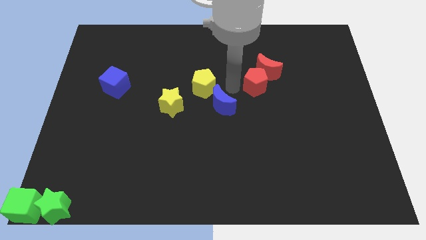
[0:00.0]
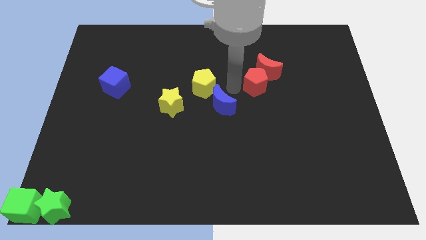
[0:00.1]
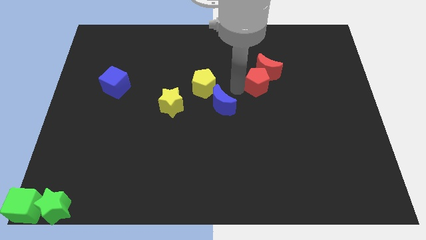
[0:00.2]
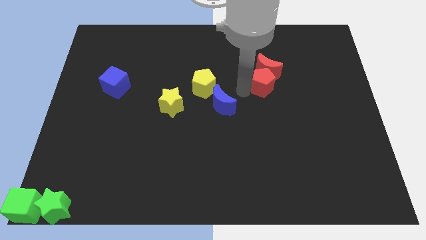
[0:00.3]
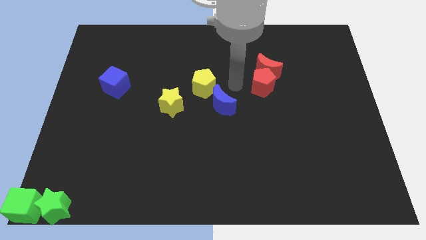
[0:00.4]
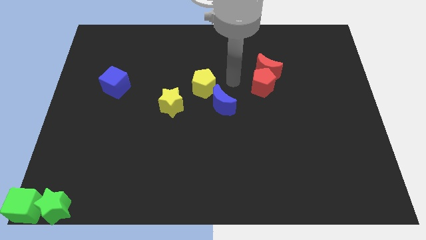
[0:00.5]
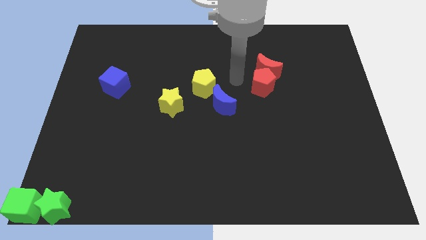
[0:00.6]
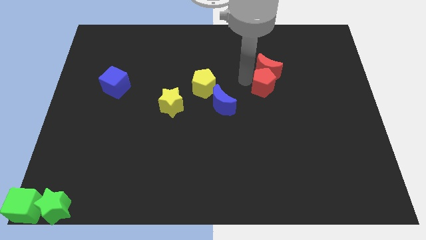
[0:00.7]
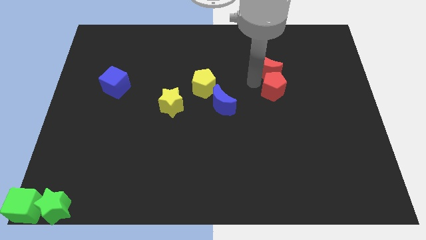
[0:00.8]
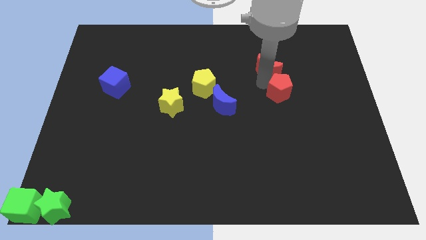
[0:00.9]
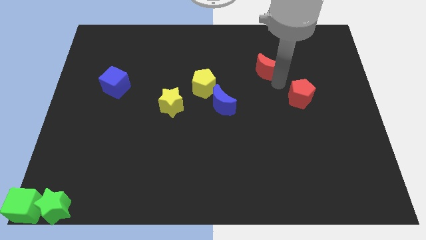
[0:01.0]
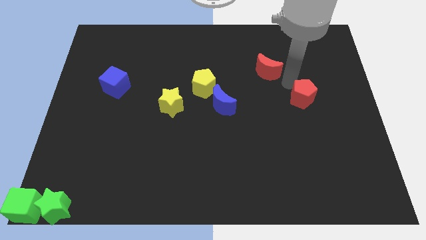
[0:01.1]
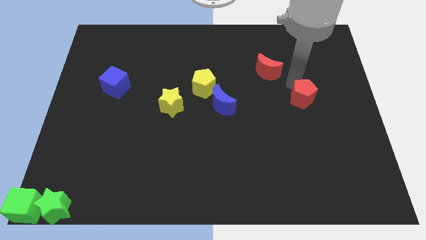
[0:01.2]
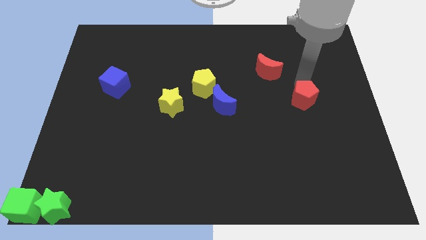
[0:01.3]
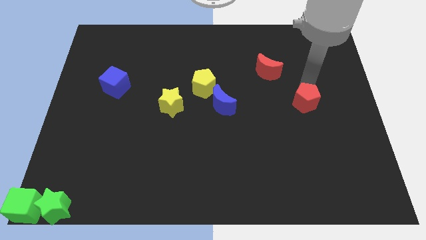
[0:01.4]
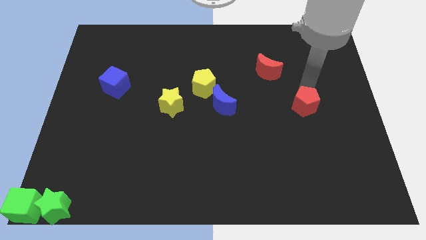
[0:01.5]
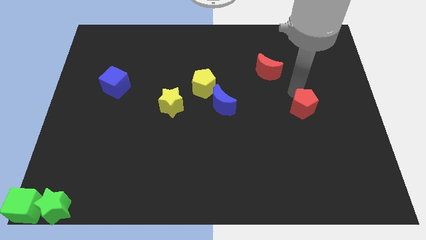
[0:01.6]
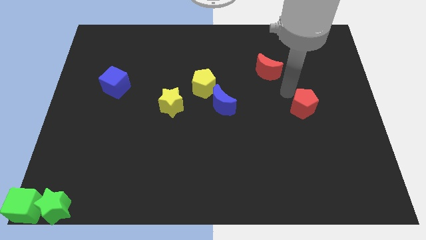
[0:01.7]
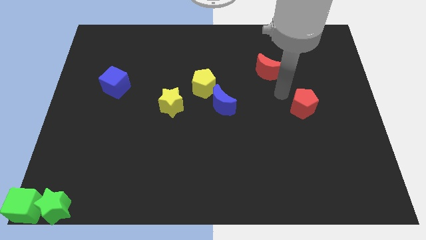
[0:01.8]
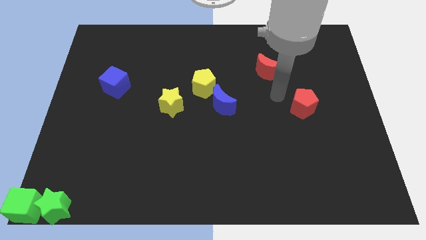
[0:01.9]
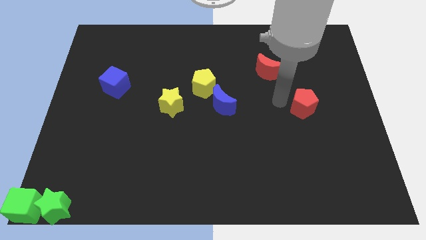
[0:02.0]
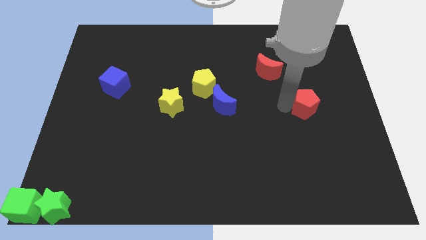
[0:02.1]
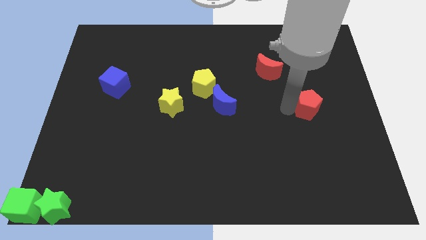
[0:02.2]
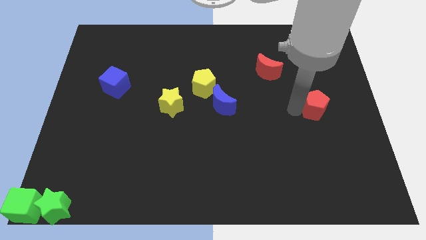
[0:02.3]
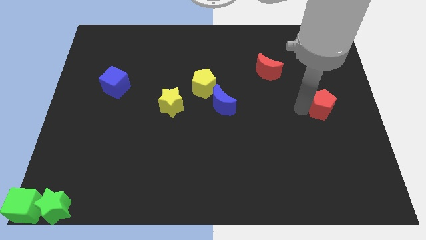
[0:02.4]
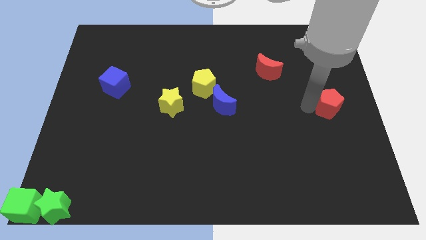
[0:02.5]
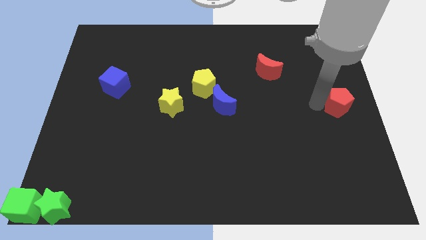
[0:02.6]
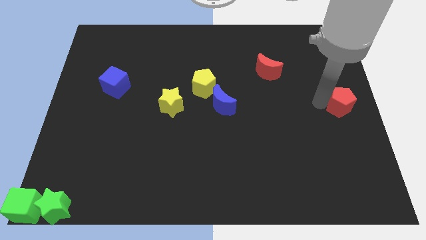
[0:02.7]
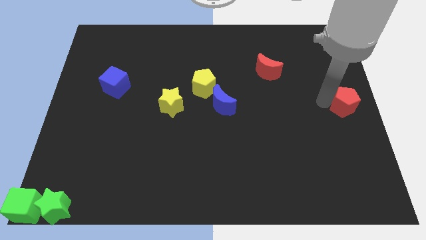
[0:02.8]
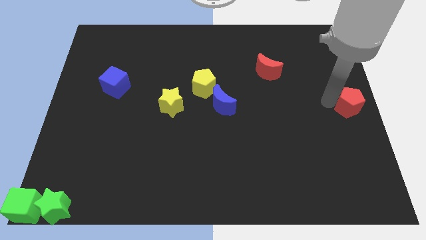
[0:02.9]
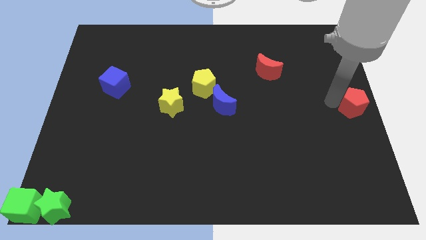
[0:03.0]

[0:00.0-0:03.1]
drag the red pentagon to the center right of the board

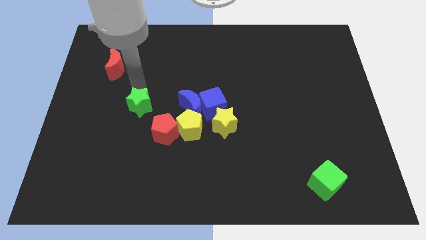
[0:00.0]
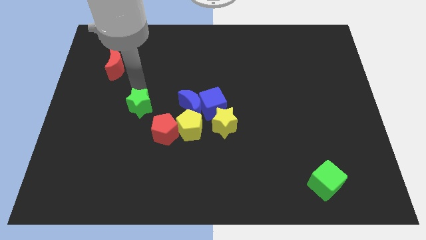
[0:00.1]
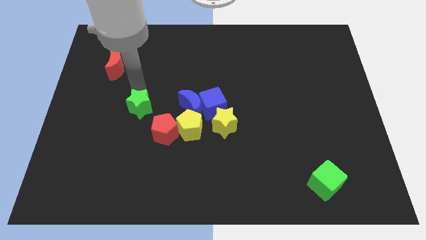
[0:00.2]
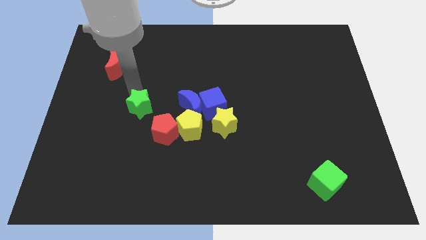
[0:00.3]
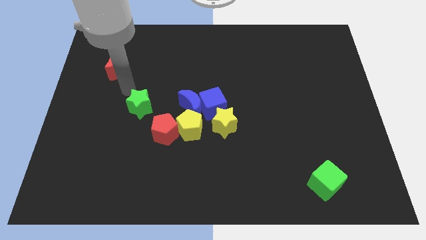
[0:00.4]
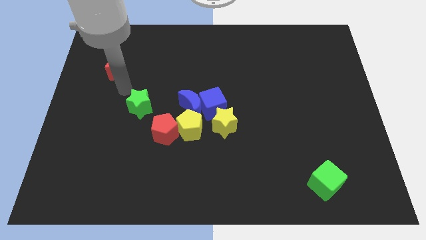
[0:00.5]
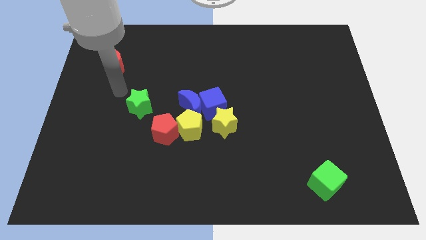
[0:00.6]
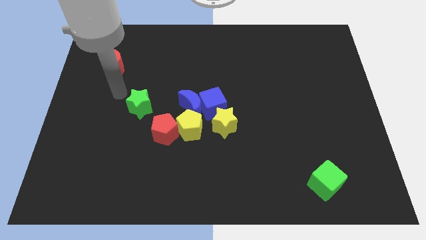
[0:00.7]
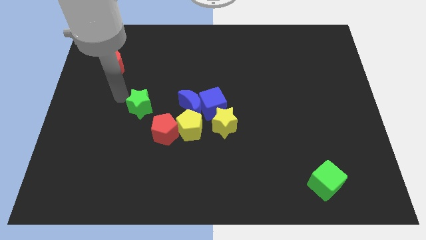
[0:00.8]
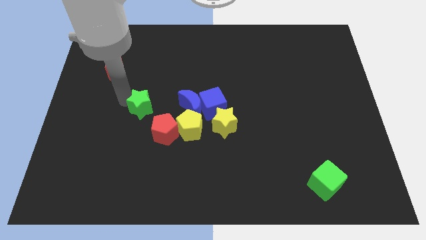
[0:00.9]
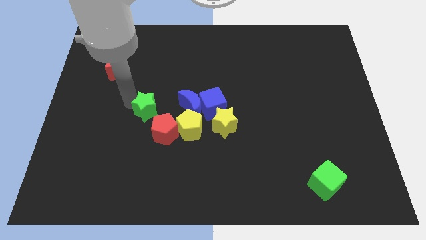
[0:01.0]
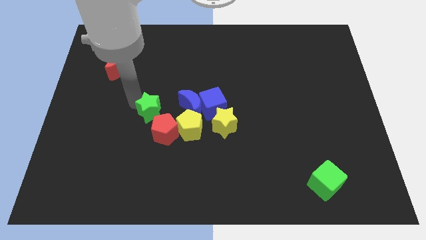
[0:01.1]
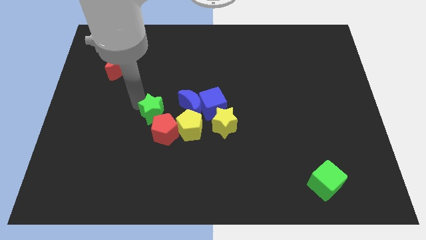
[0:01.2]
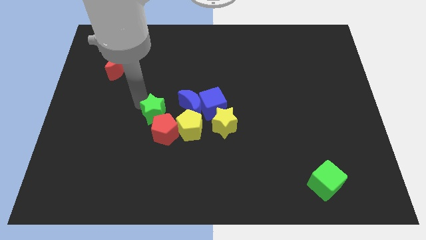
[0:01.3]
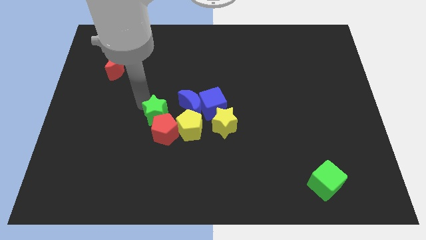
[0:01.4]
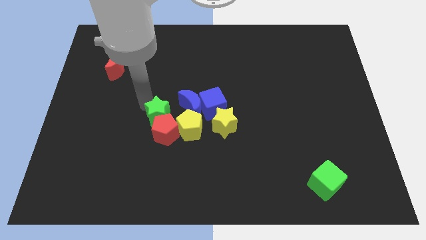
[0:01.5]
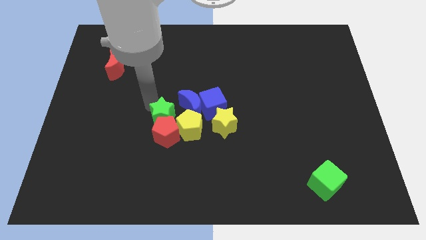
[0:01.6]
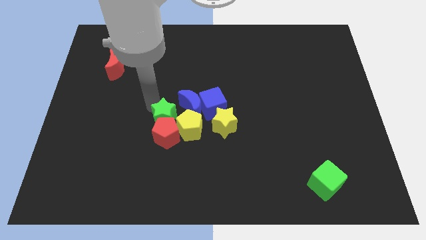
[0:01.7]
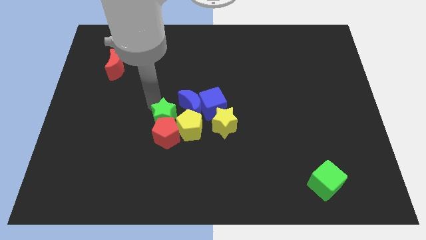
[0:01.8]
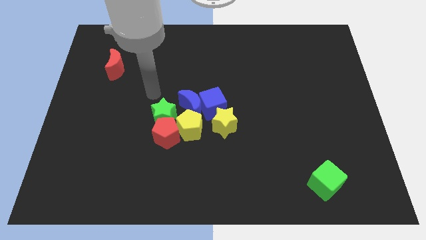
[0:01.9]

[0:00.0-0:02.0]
move green star towards the red pentagon

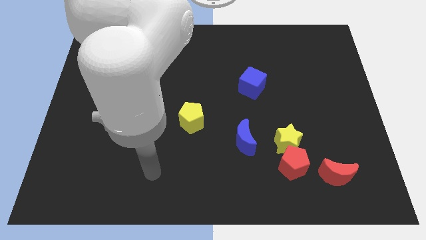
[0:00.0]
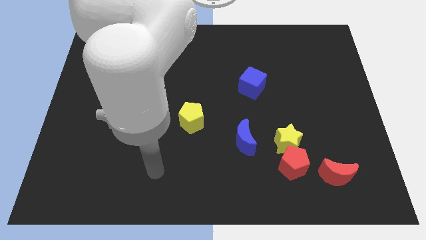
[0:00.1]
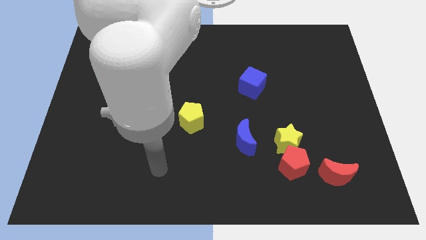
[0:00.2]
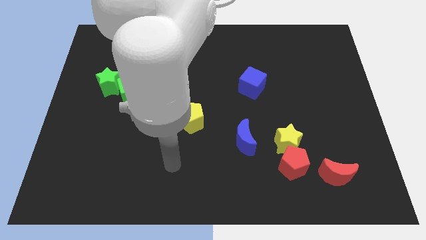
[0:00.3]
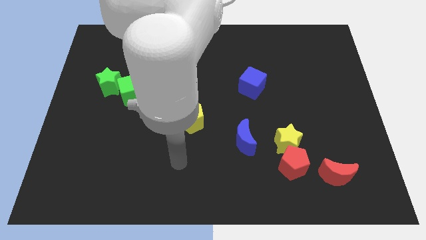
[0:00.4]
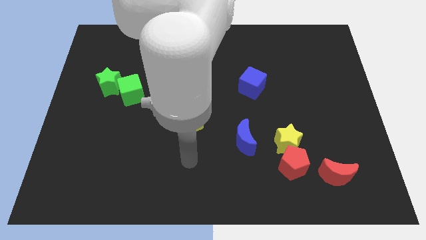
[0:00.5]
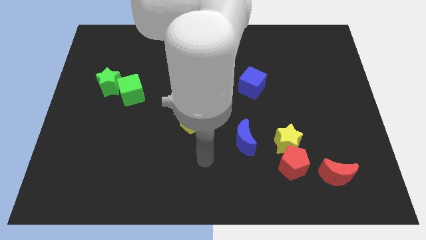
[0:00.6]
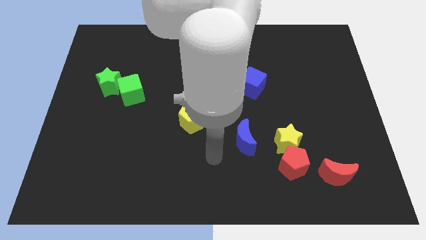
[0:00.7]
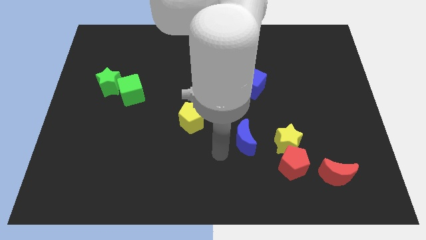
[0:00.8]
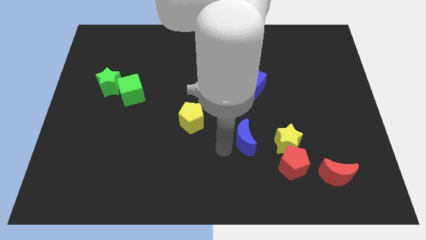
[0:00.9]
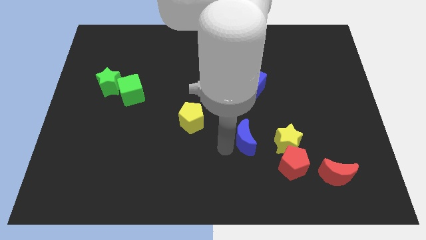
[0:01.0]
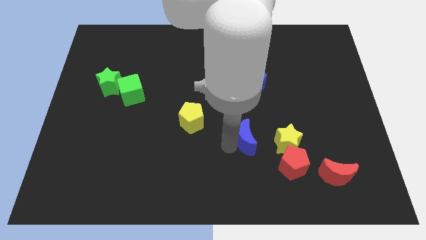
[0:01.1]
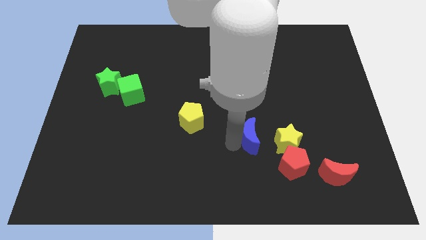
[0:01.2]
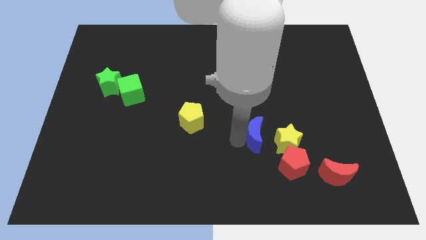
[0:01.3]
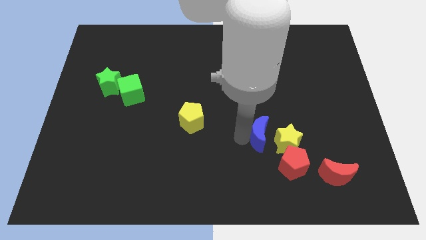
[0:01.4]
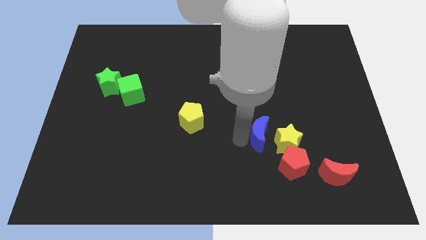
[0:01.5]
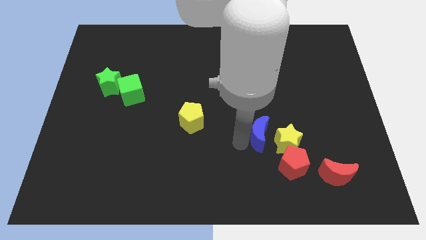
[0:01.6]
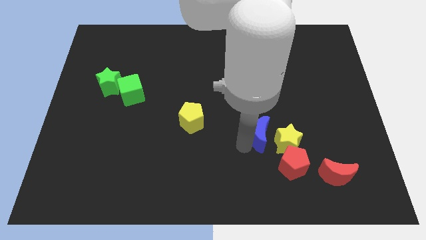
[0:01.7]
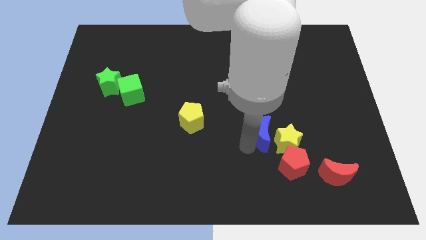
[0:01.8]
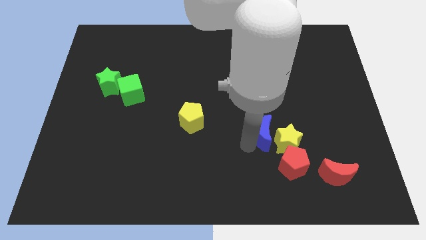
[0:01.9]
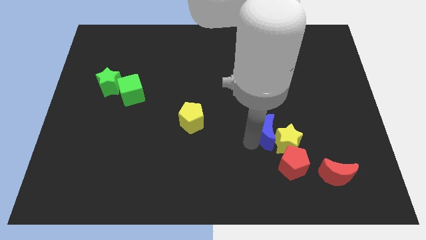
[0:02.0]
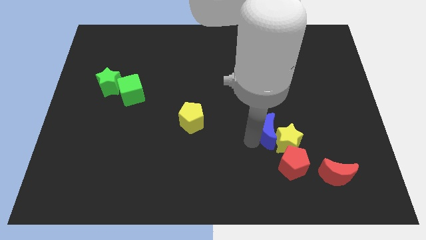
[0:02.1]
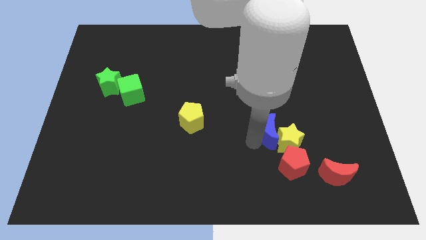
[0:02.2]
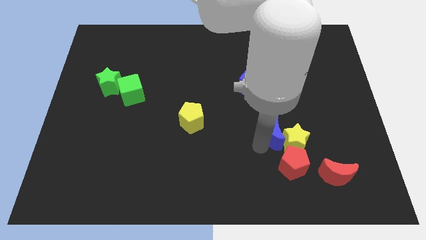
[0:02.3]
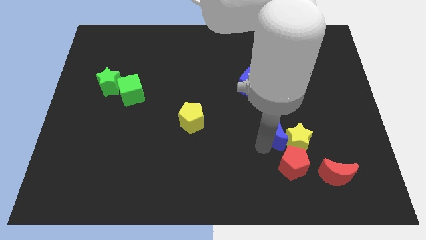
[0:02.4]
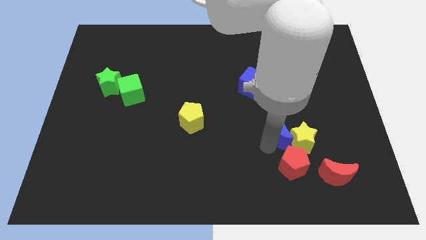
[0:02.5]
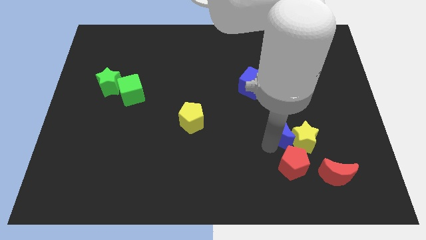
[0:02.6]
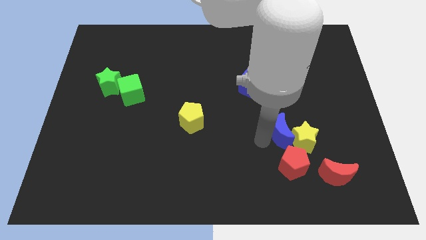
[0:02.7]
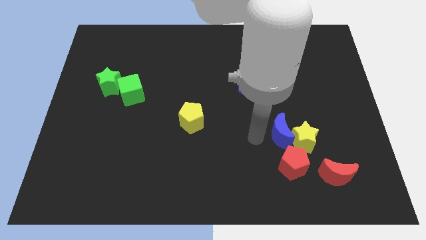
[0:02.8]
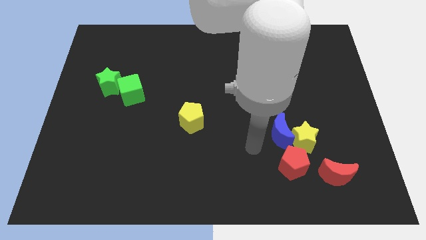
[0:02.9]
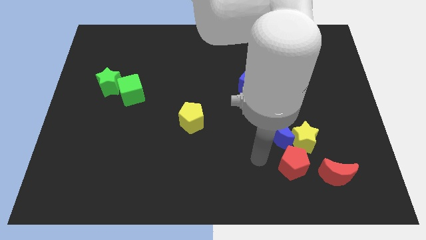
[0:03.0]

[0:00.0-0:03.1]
move blue moon into the yellow star

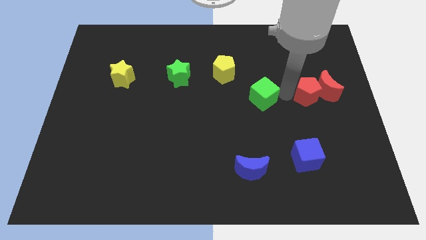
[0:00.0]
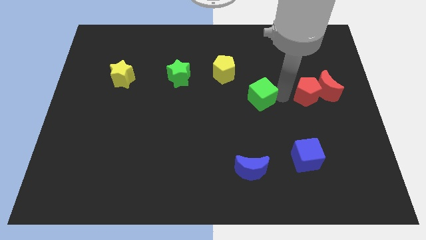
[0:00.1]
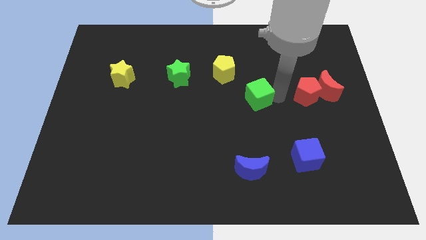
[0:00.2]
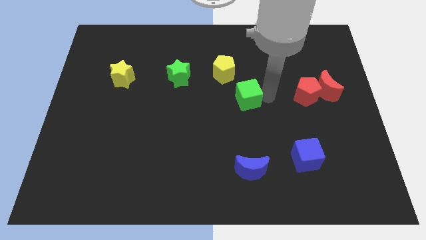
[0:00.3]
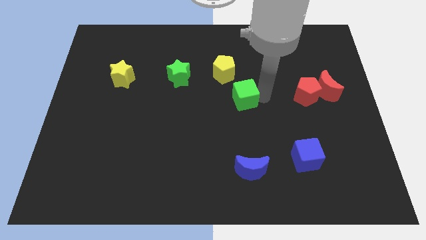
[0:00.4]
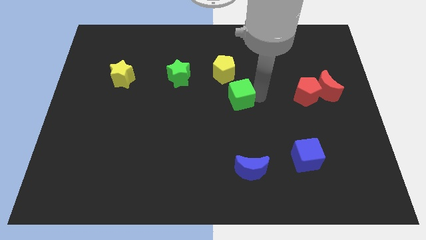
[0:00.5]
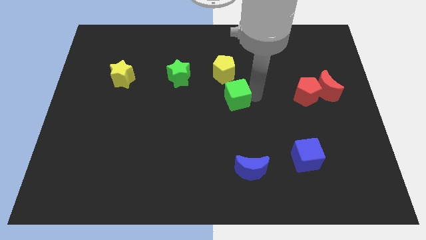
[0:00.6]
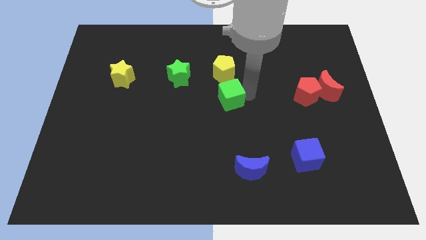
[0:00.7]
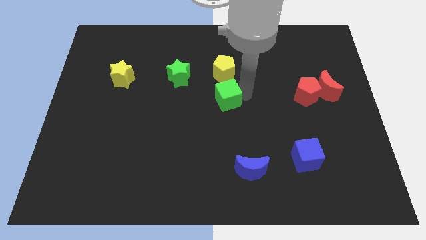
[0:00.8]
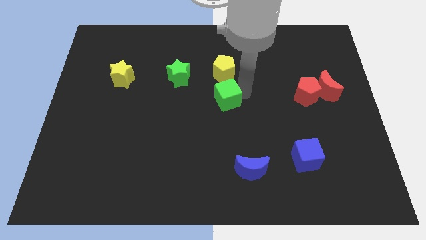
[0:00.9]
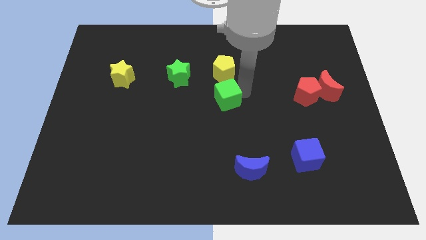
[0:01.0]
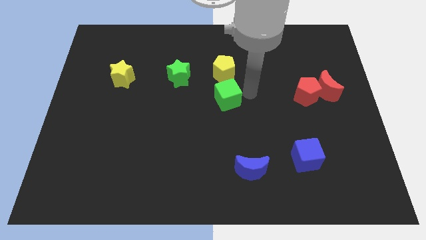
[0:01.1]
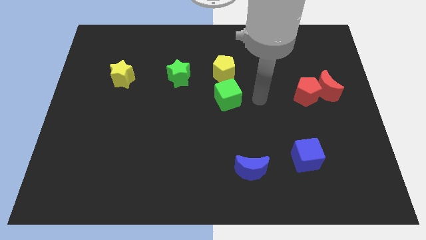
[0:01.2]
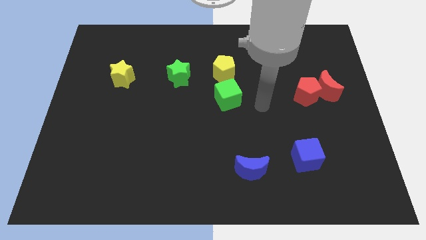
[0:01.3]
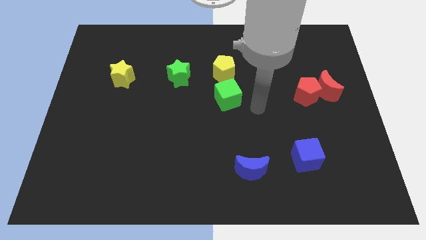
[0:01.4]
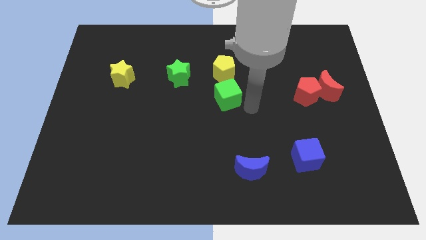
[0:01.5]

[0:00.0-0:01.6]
move the green cube bottom to the yellow pentagon
